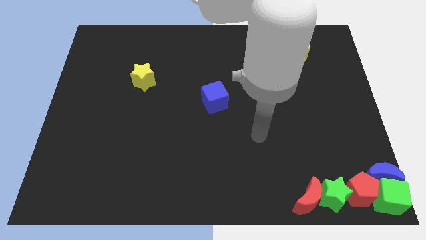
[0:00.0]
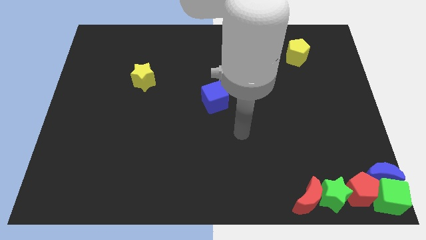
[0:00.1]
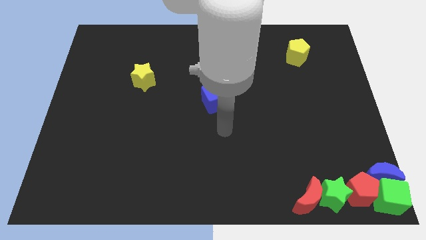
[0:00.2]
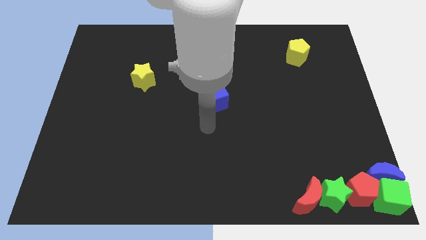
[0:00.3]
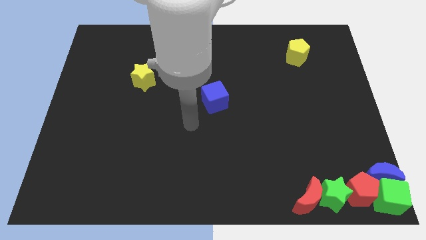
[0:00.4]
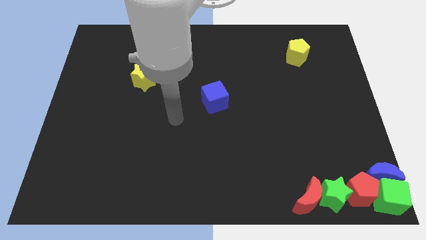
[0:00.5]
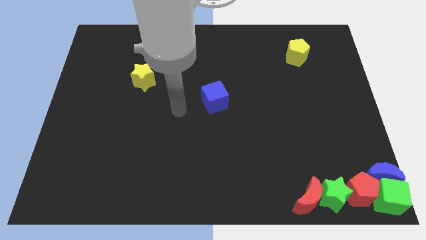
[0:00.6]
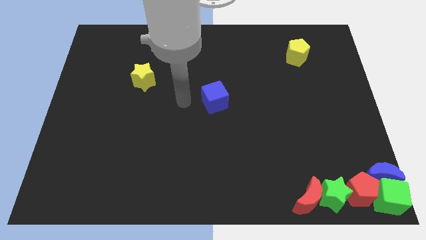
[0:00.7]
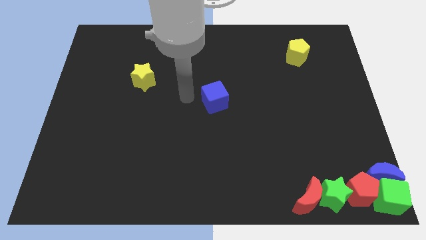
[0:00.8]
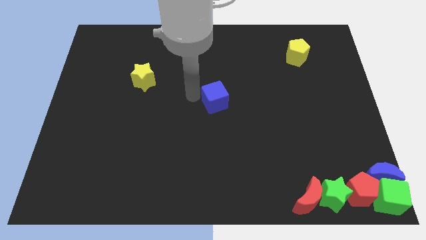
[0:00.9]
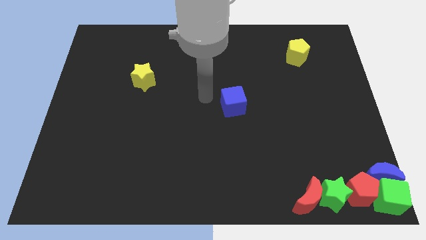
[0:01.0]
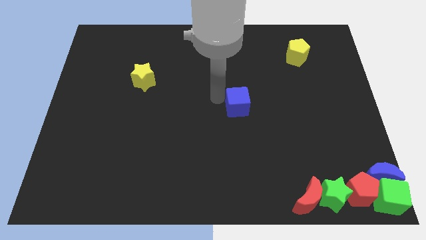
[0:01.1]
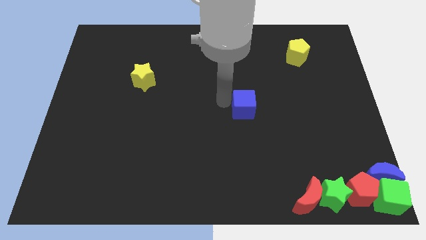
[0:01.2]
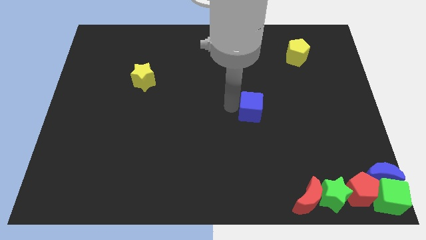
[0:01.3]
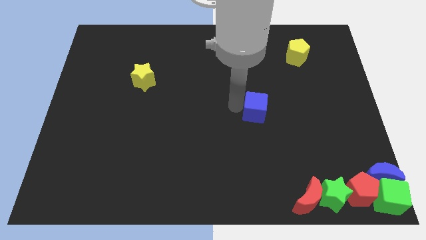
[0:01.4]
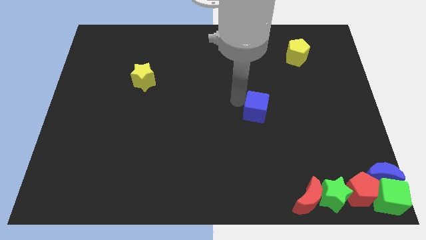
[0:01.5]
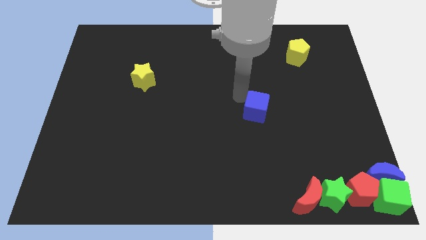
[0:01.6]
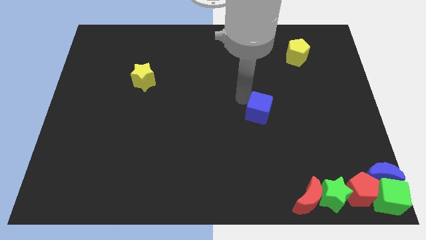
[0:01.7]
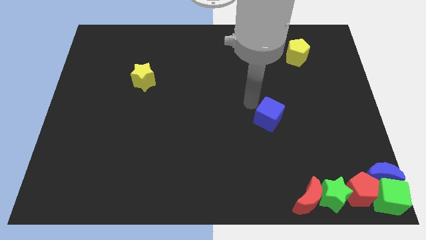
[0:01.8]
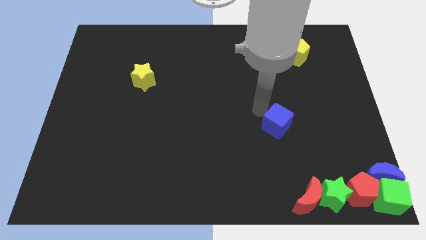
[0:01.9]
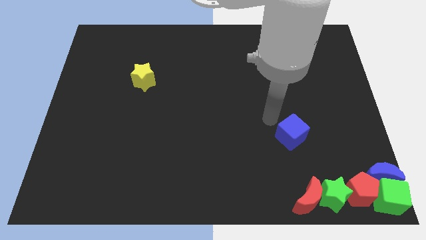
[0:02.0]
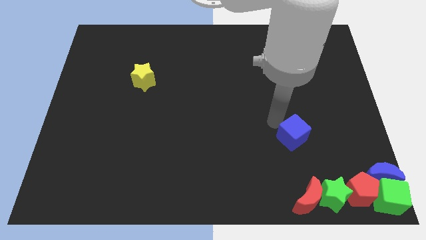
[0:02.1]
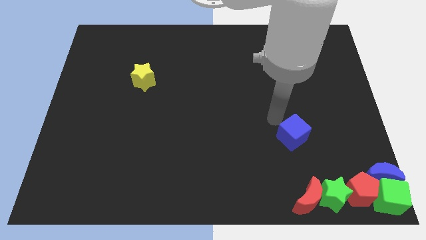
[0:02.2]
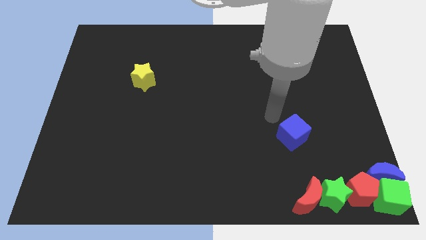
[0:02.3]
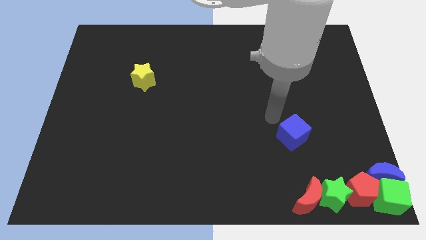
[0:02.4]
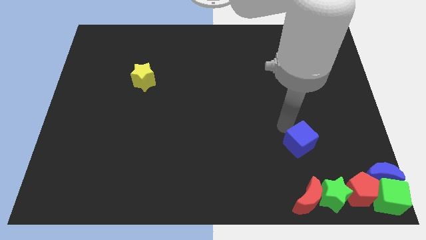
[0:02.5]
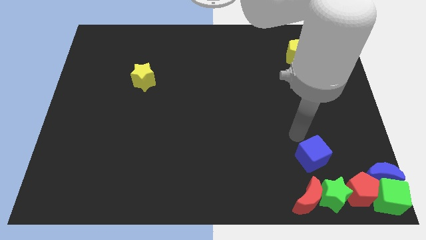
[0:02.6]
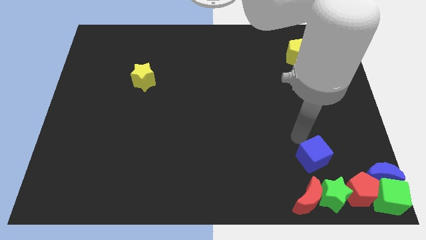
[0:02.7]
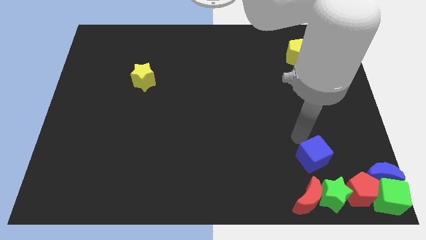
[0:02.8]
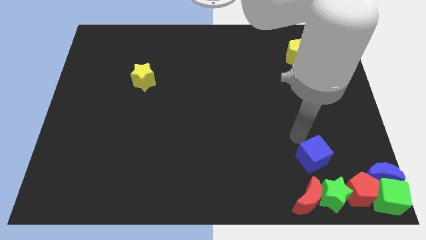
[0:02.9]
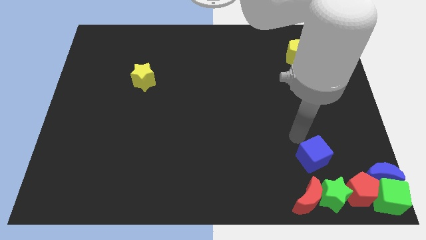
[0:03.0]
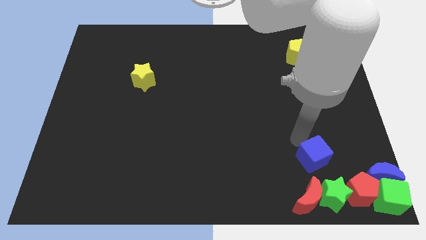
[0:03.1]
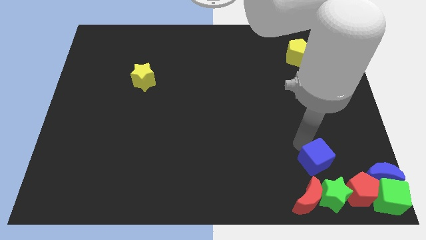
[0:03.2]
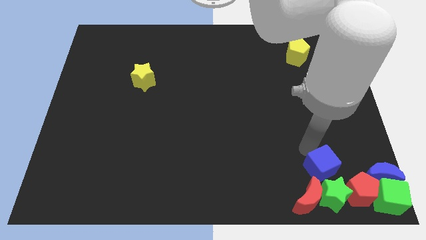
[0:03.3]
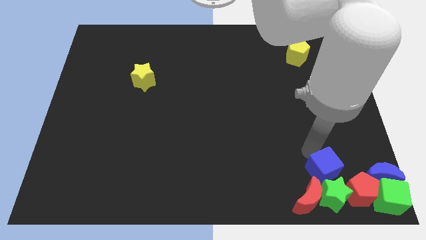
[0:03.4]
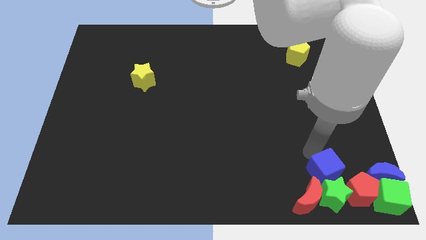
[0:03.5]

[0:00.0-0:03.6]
push the blue cube to the top side of the green star

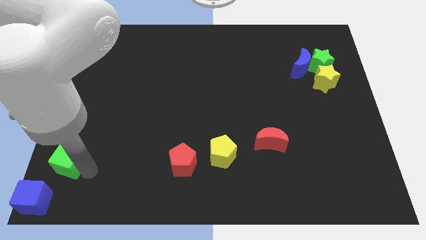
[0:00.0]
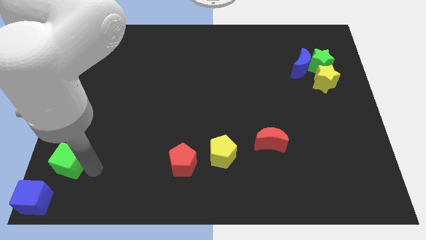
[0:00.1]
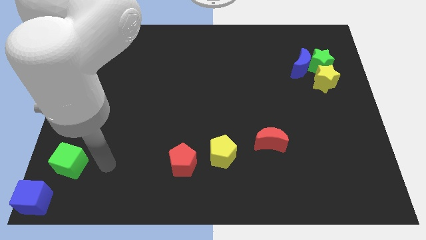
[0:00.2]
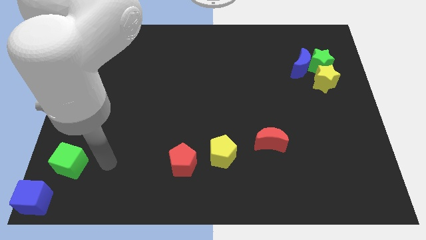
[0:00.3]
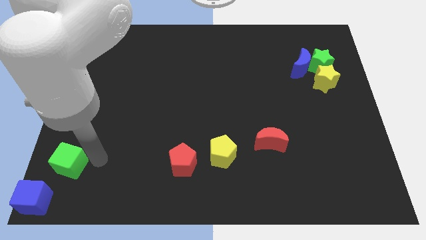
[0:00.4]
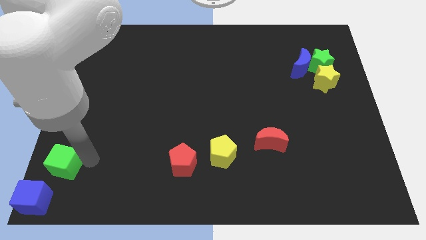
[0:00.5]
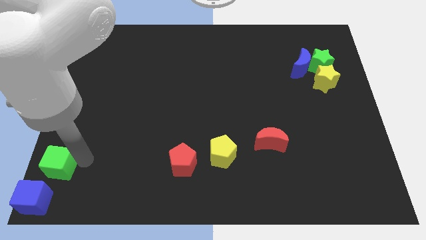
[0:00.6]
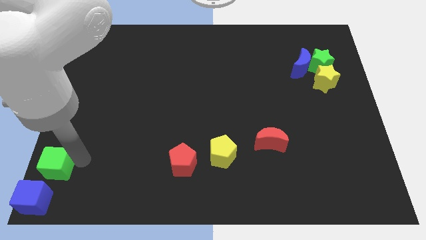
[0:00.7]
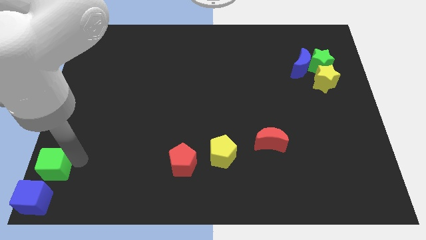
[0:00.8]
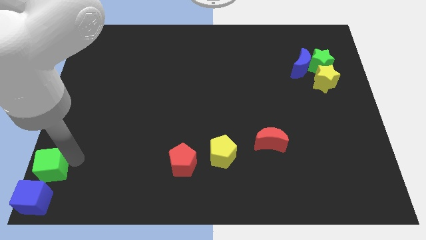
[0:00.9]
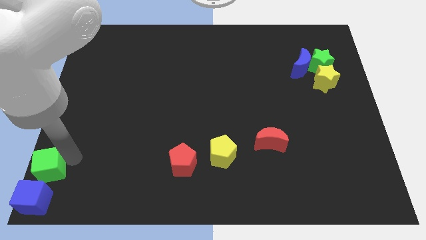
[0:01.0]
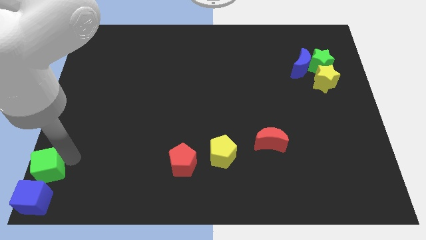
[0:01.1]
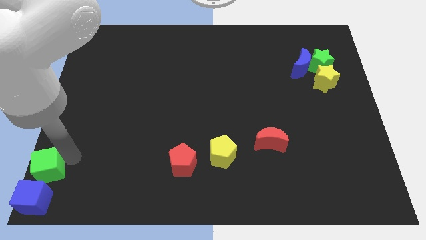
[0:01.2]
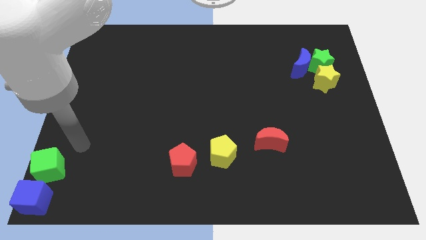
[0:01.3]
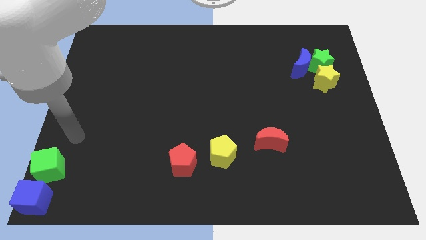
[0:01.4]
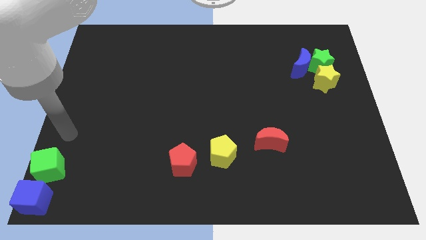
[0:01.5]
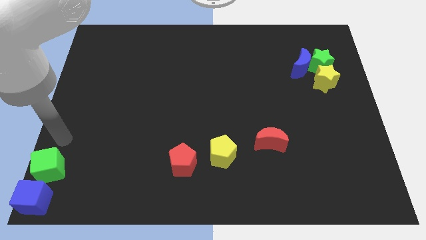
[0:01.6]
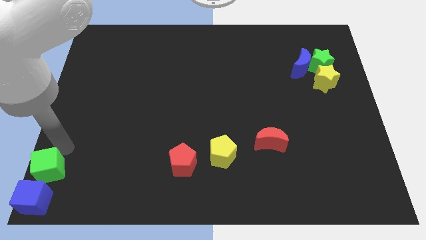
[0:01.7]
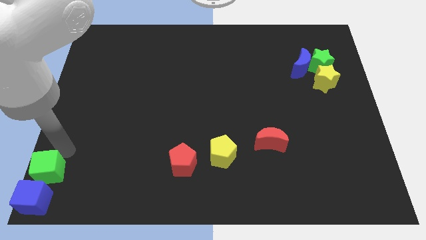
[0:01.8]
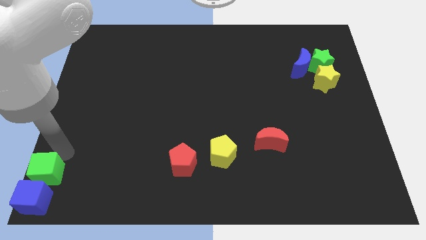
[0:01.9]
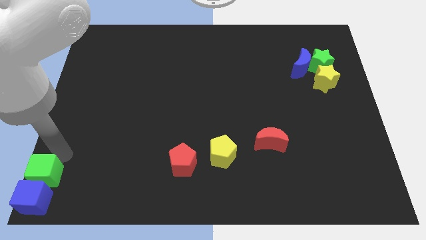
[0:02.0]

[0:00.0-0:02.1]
move the green cube to the top of the blue cube

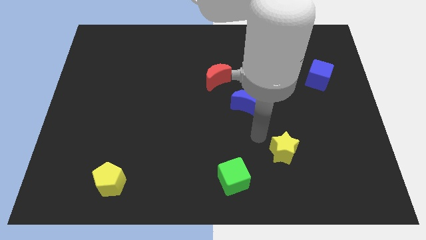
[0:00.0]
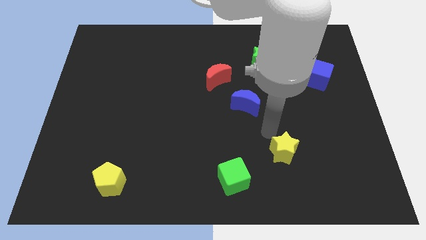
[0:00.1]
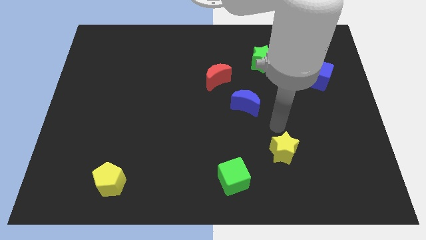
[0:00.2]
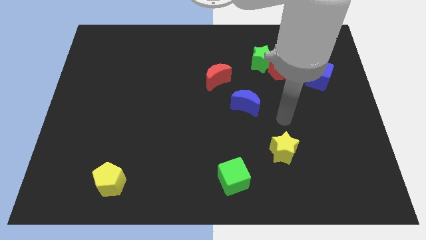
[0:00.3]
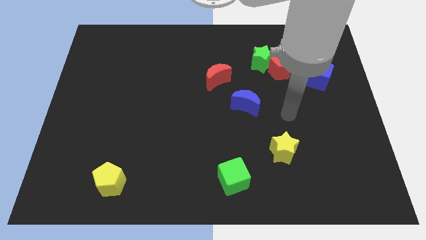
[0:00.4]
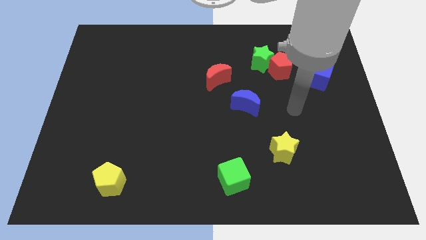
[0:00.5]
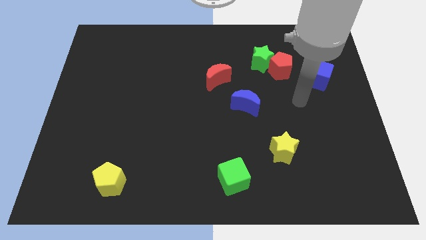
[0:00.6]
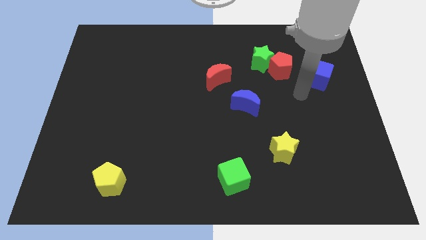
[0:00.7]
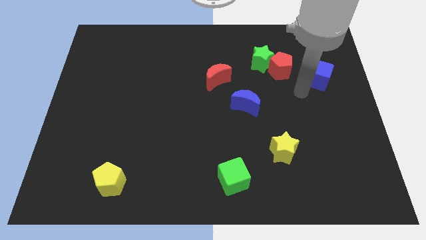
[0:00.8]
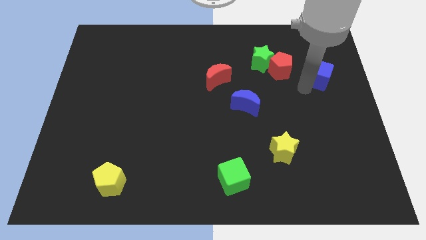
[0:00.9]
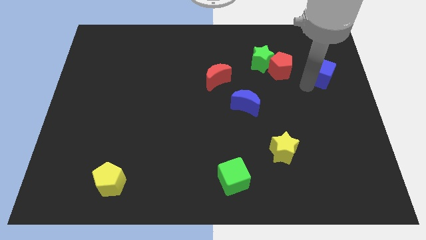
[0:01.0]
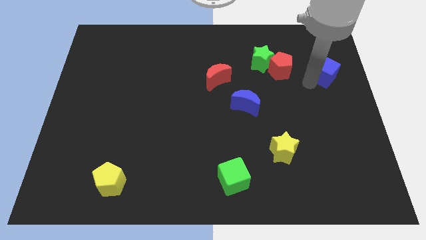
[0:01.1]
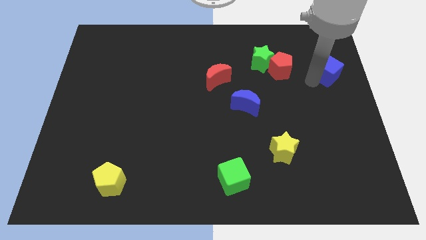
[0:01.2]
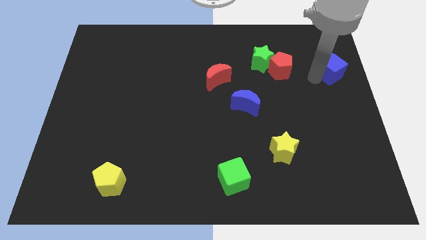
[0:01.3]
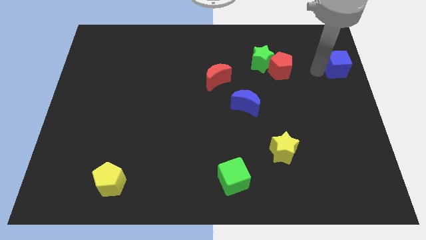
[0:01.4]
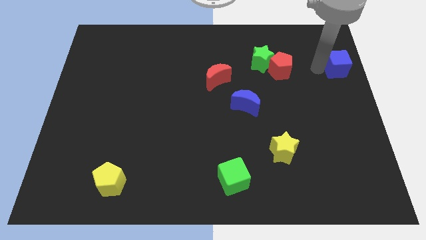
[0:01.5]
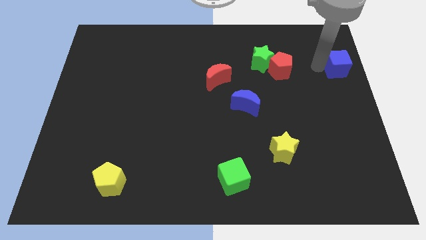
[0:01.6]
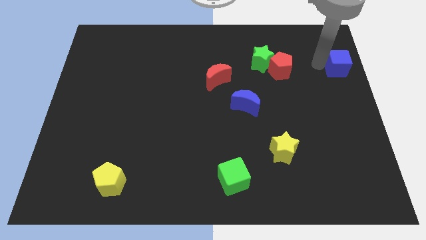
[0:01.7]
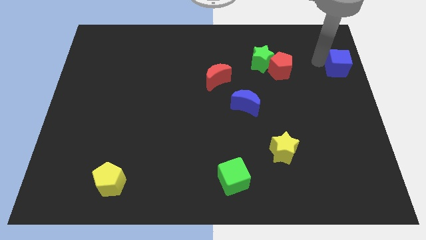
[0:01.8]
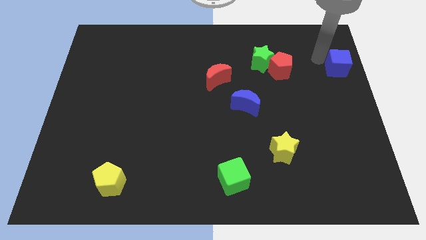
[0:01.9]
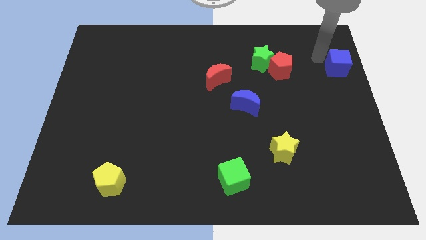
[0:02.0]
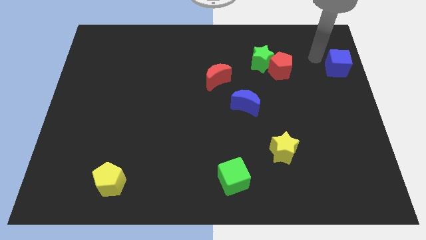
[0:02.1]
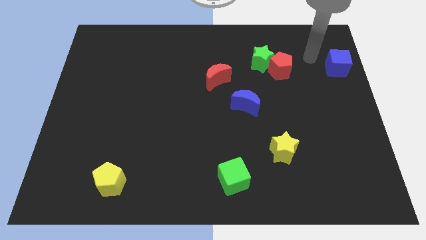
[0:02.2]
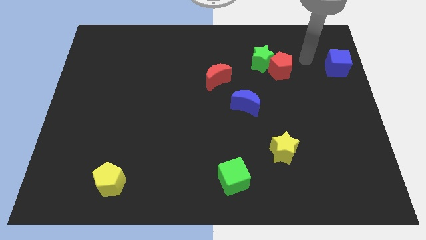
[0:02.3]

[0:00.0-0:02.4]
push the blue cube to the right of the board

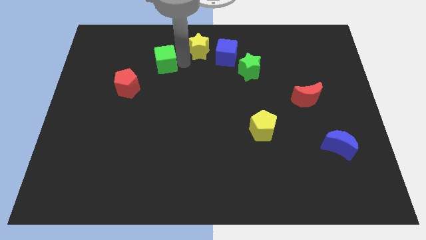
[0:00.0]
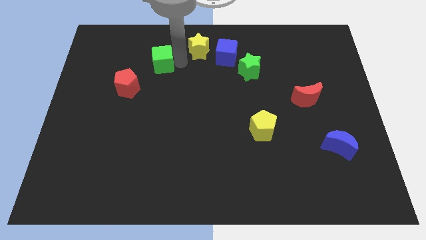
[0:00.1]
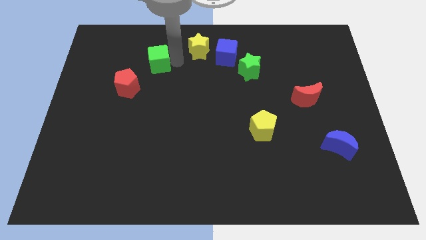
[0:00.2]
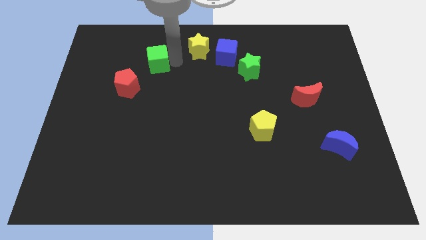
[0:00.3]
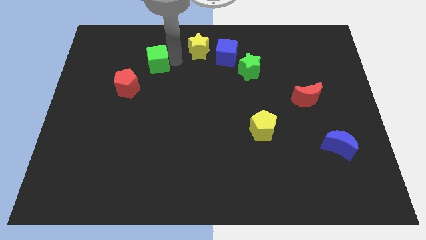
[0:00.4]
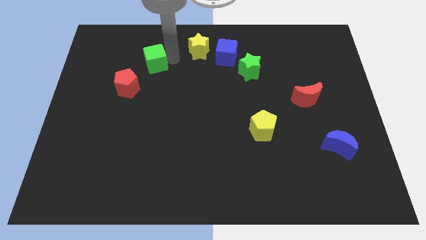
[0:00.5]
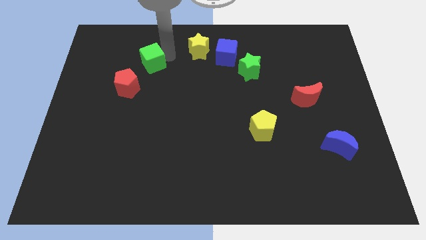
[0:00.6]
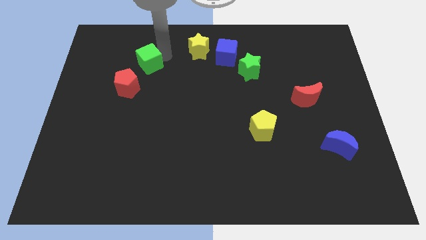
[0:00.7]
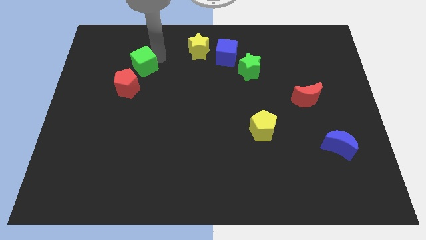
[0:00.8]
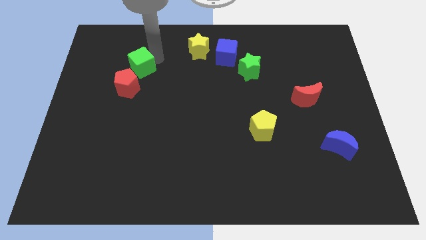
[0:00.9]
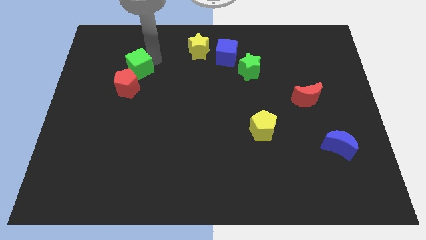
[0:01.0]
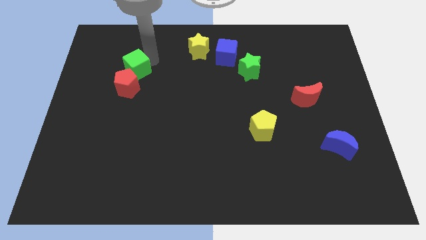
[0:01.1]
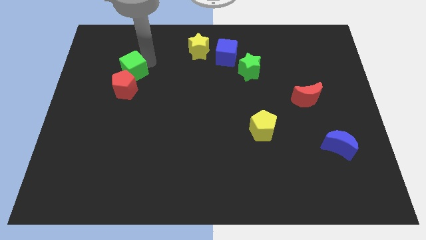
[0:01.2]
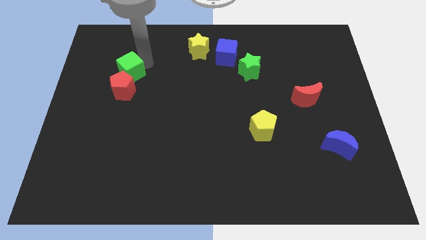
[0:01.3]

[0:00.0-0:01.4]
slide the green cube into the red pentagon
